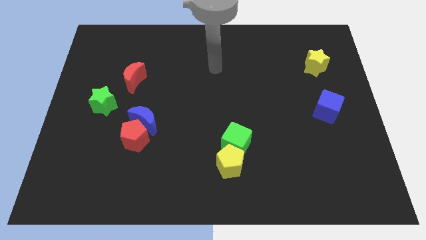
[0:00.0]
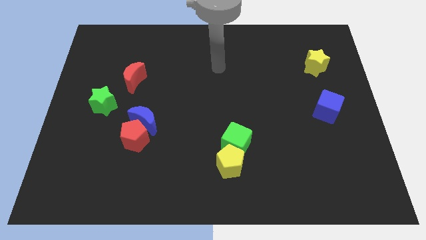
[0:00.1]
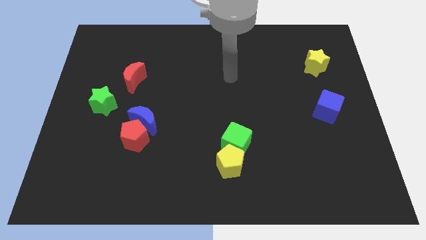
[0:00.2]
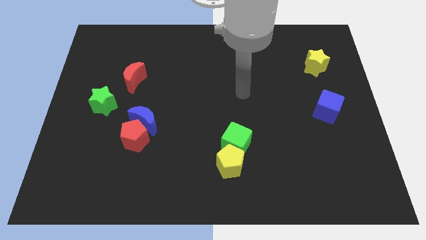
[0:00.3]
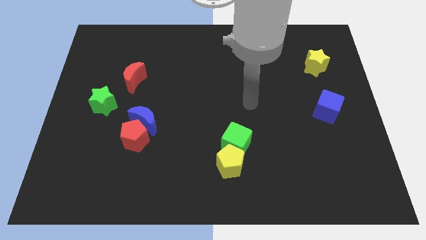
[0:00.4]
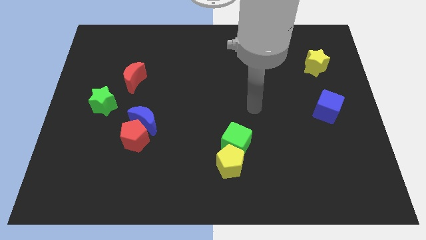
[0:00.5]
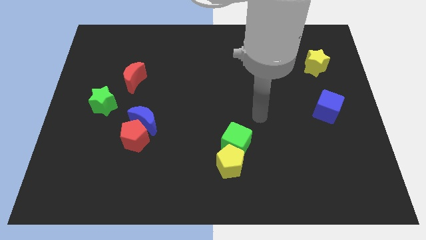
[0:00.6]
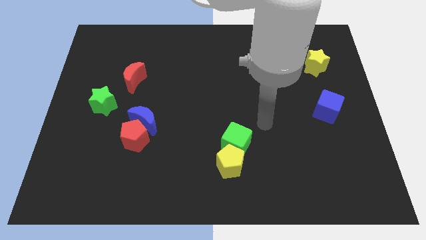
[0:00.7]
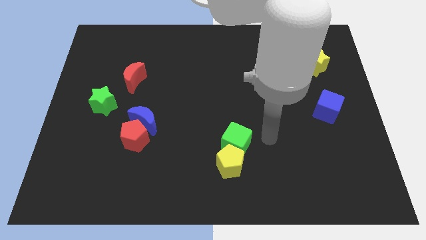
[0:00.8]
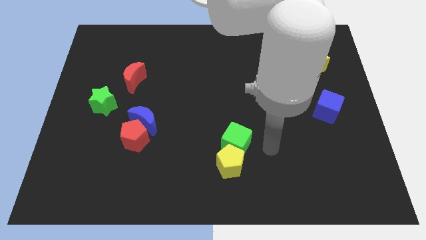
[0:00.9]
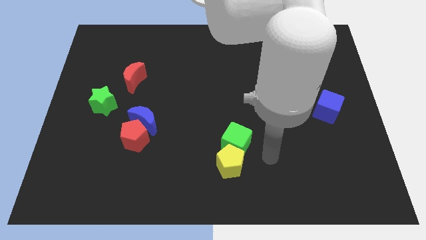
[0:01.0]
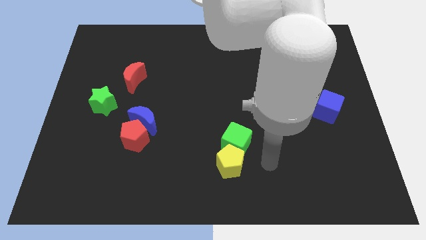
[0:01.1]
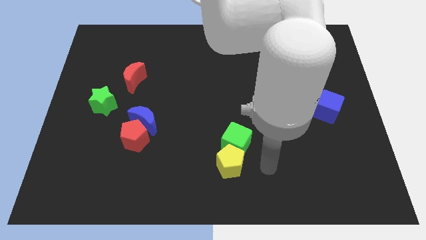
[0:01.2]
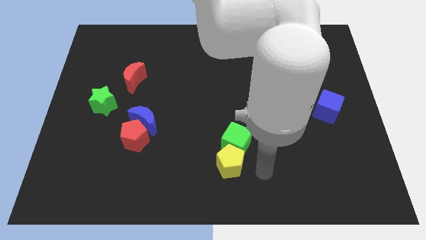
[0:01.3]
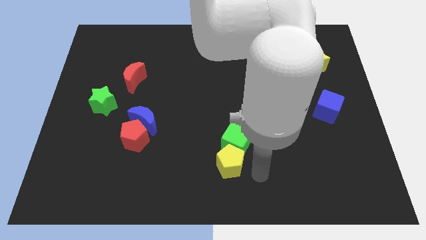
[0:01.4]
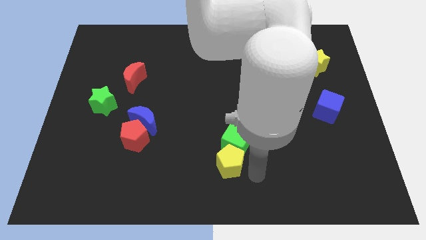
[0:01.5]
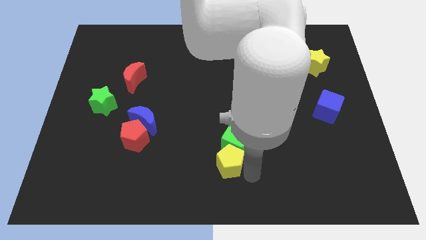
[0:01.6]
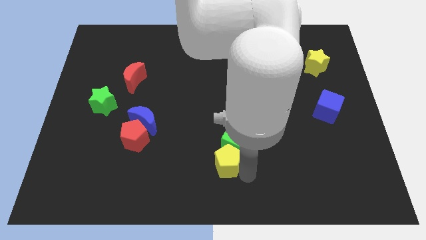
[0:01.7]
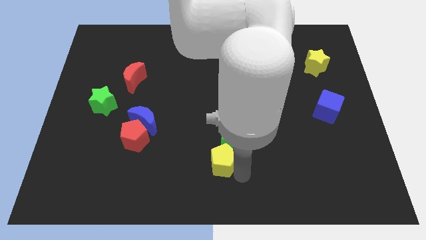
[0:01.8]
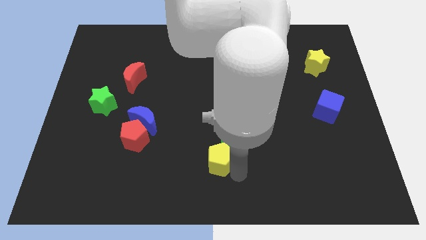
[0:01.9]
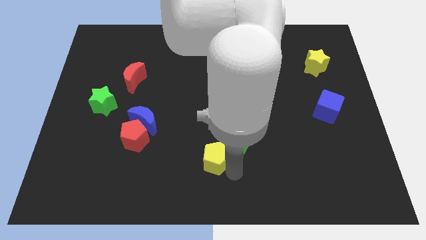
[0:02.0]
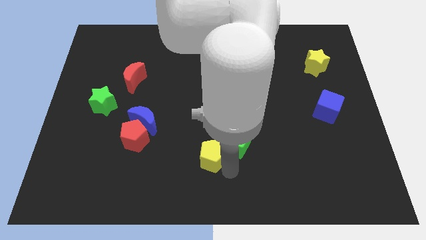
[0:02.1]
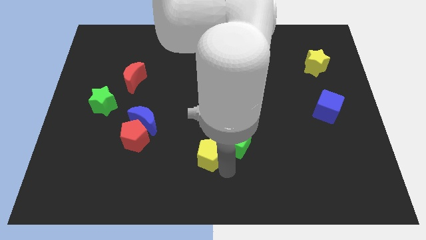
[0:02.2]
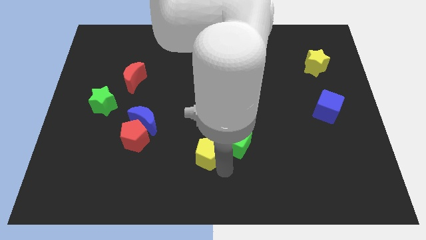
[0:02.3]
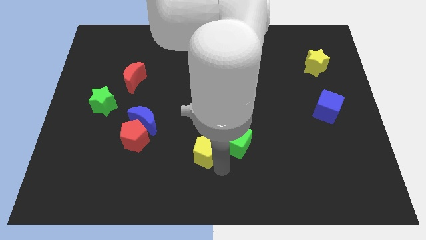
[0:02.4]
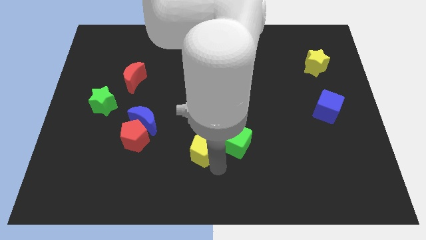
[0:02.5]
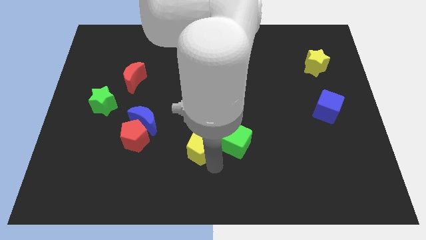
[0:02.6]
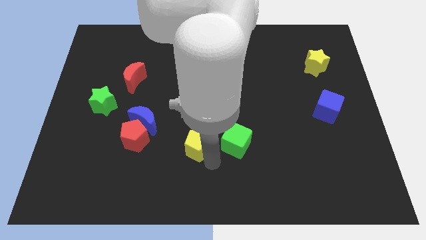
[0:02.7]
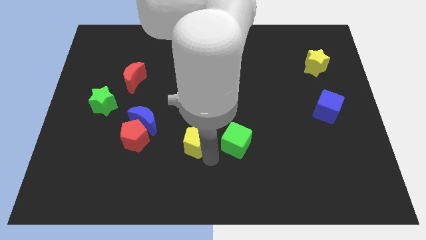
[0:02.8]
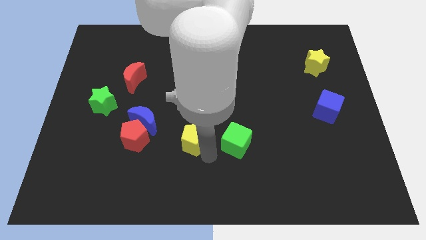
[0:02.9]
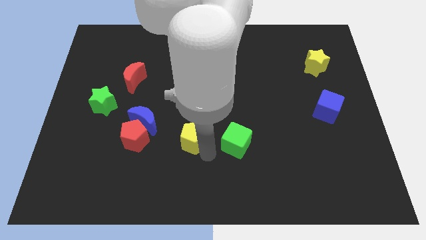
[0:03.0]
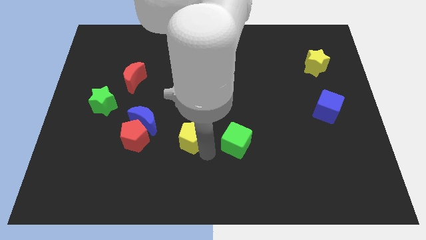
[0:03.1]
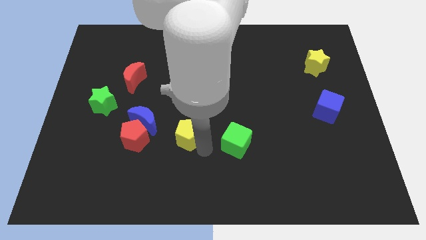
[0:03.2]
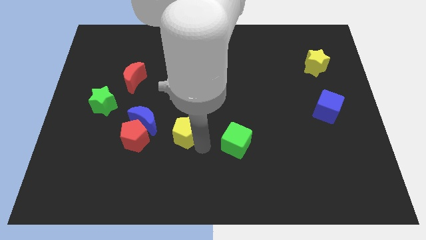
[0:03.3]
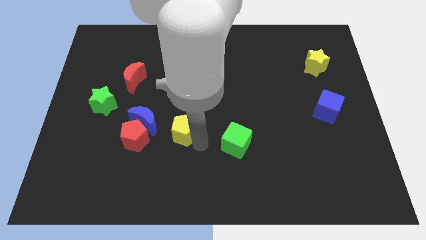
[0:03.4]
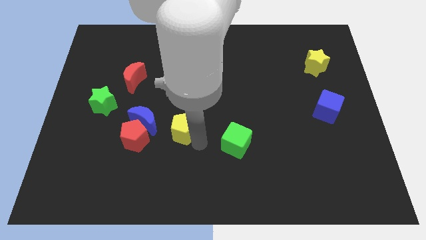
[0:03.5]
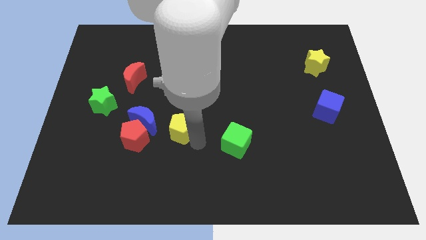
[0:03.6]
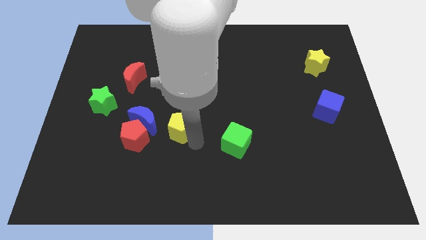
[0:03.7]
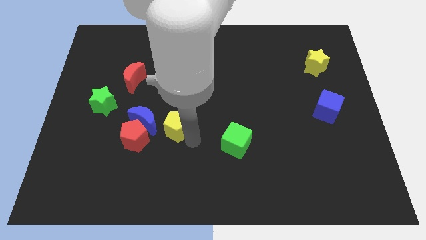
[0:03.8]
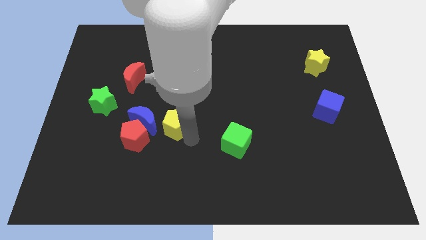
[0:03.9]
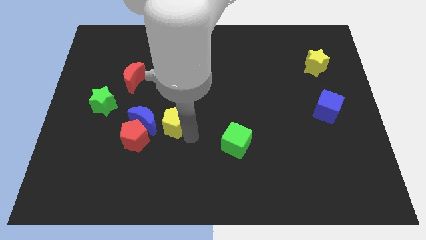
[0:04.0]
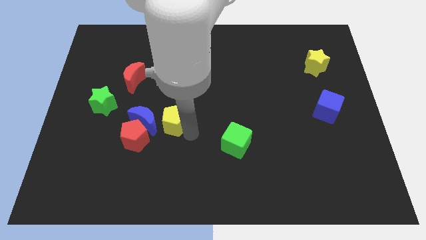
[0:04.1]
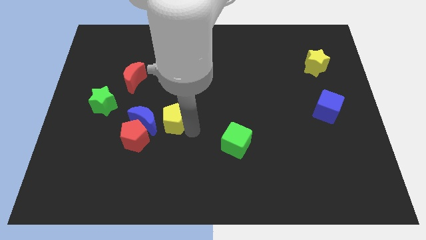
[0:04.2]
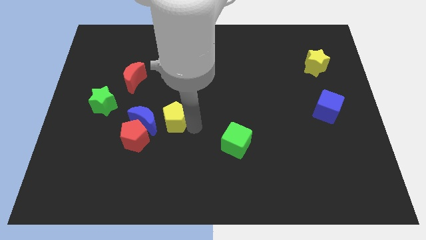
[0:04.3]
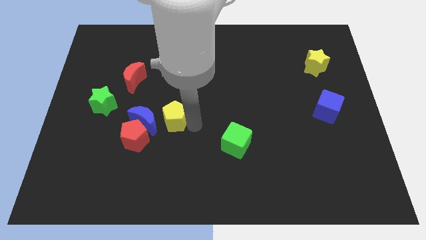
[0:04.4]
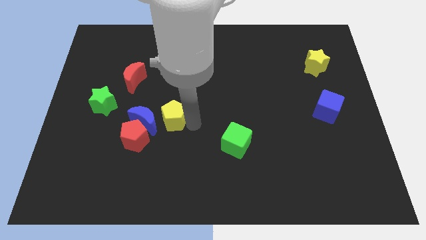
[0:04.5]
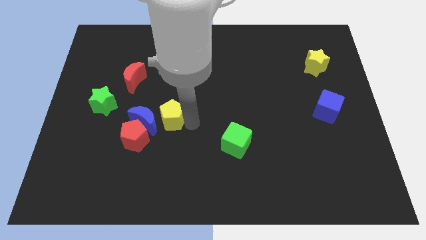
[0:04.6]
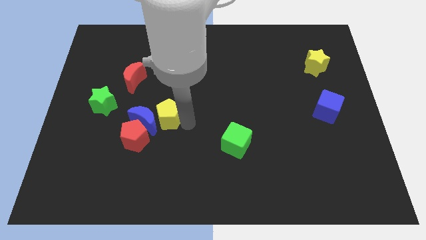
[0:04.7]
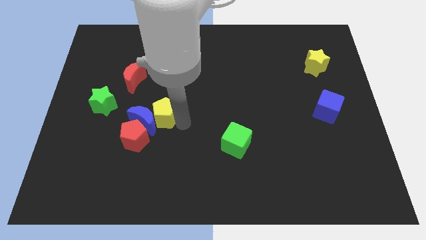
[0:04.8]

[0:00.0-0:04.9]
move the yellow pentagon towards the blue moon

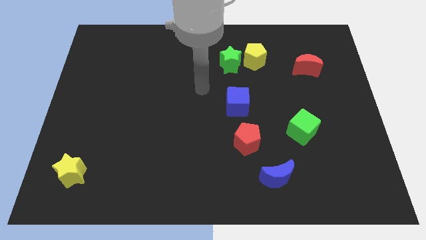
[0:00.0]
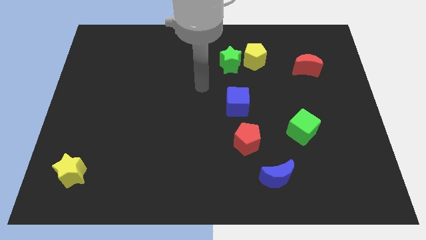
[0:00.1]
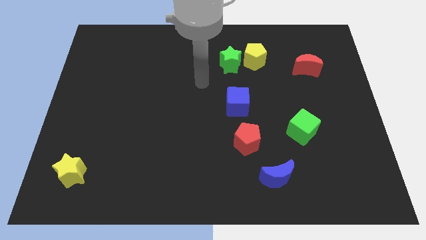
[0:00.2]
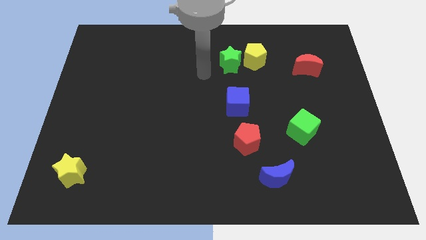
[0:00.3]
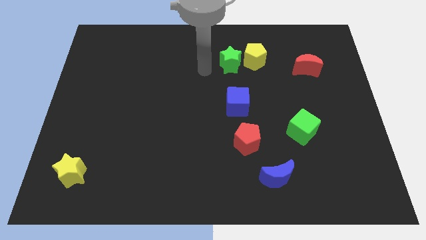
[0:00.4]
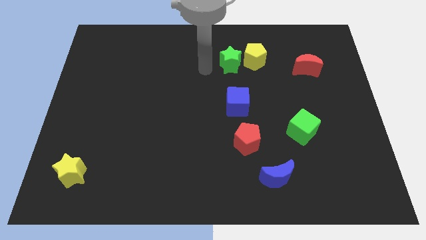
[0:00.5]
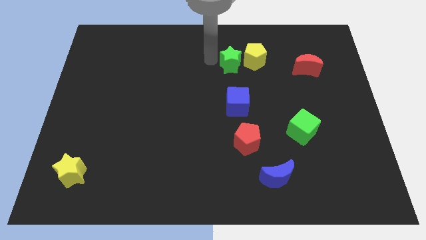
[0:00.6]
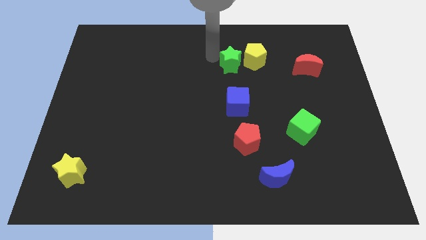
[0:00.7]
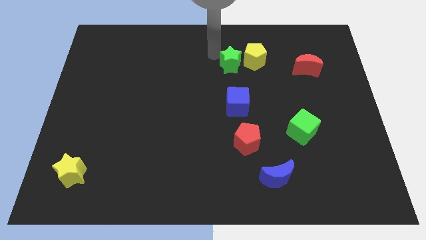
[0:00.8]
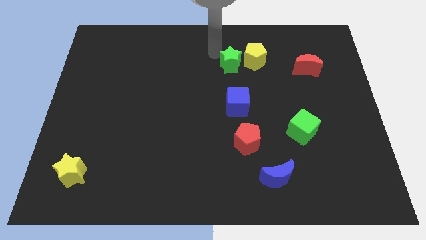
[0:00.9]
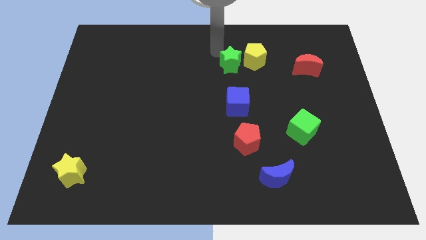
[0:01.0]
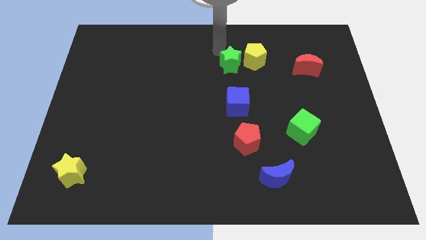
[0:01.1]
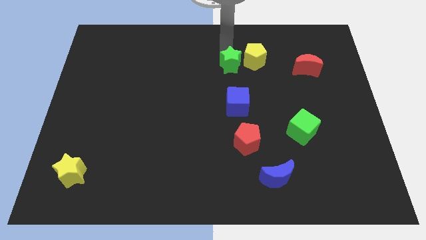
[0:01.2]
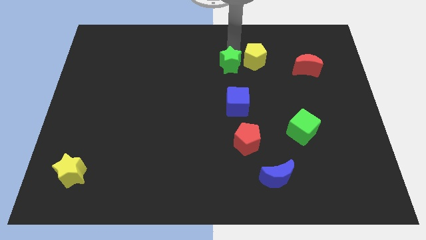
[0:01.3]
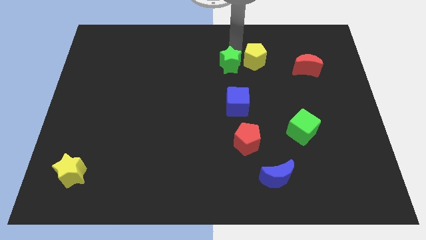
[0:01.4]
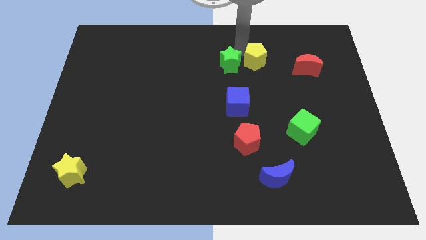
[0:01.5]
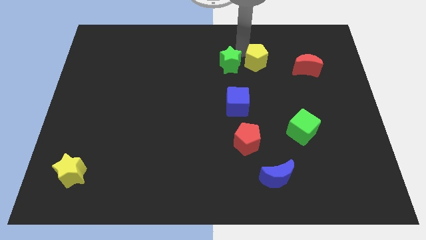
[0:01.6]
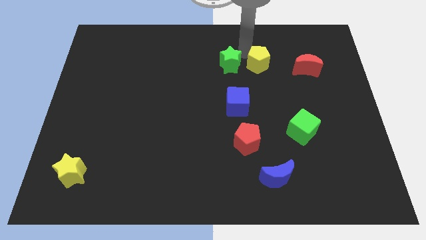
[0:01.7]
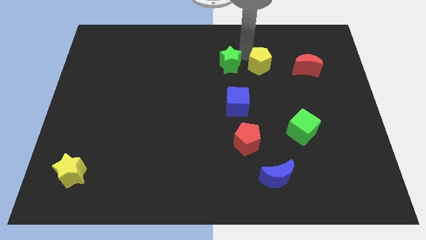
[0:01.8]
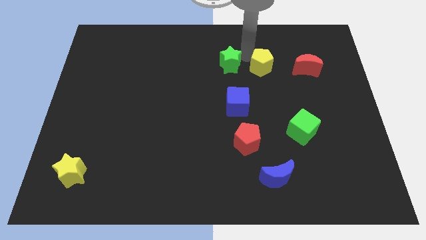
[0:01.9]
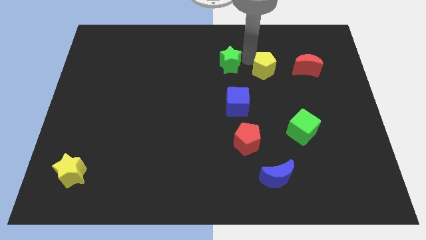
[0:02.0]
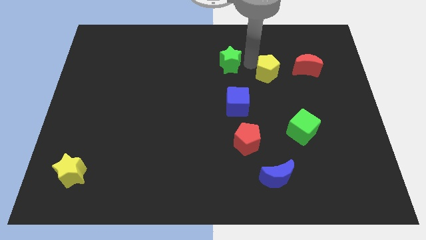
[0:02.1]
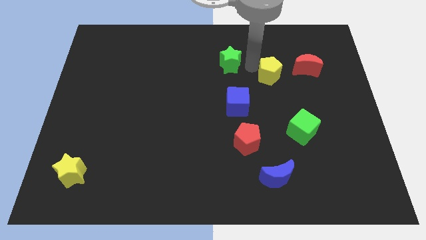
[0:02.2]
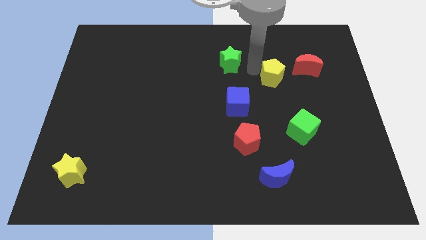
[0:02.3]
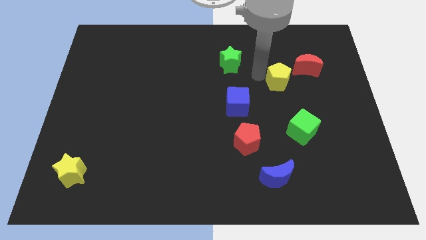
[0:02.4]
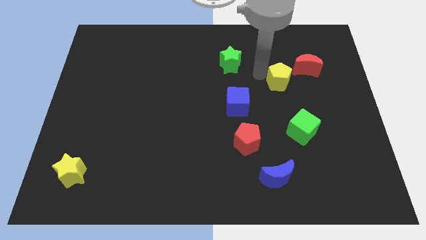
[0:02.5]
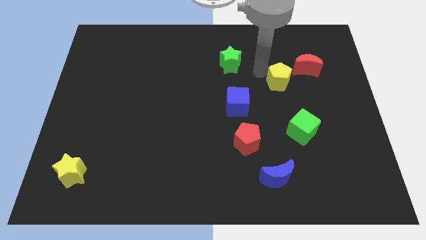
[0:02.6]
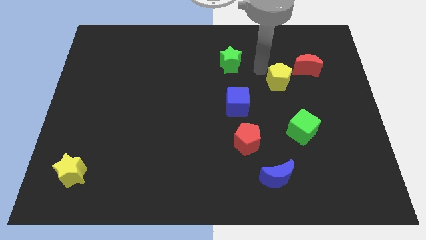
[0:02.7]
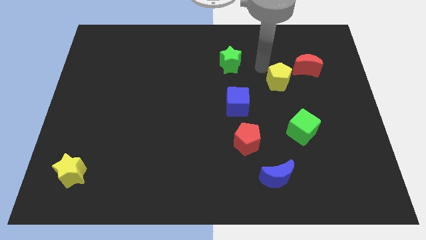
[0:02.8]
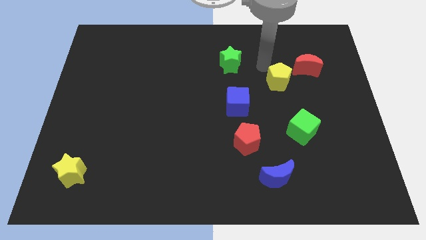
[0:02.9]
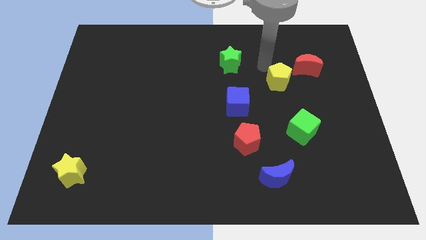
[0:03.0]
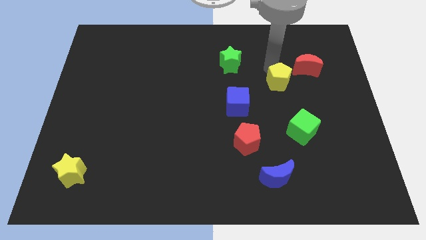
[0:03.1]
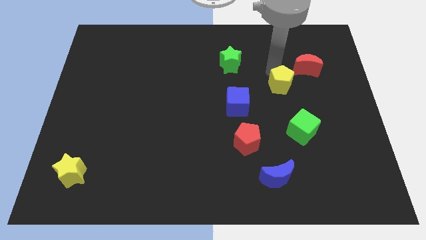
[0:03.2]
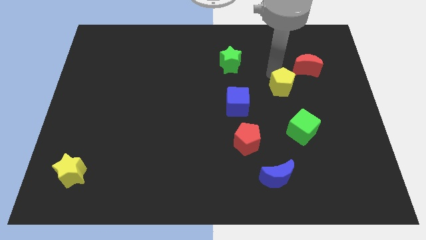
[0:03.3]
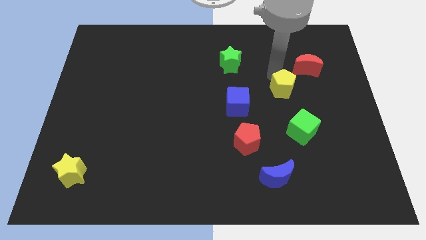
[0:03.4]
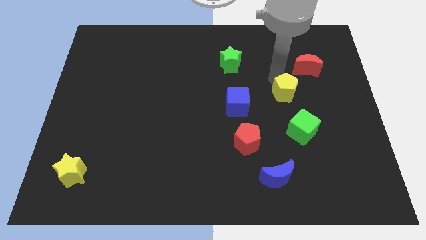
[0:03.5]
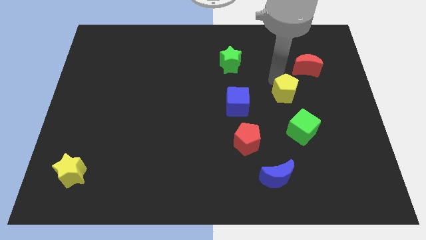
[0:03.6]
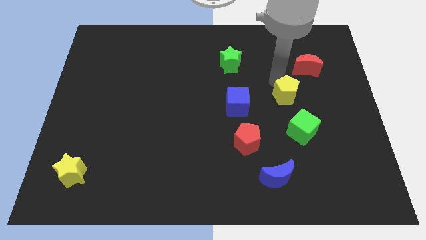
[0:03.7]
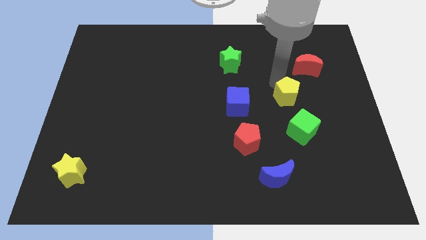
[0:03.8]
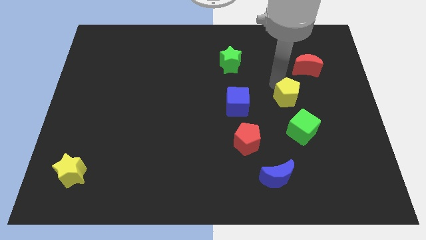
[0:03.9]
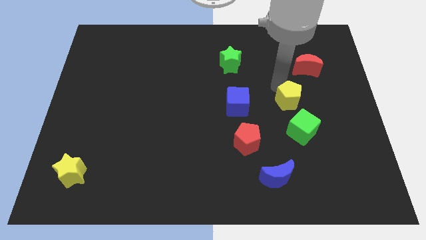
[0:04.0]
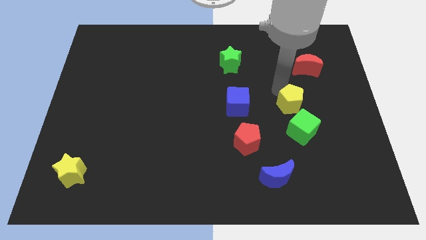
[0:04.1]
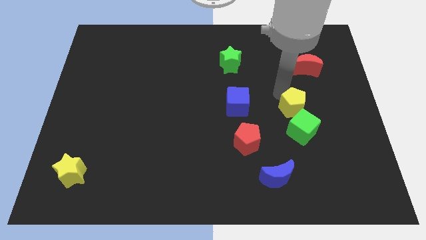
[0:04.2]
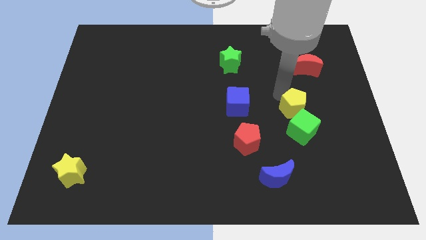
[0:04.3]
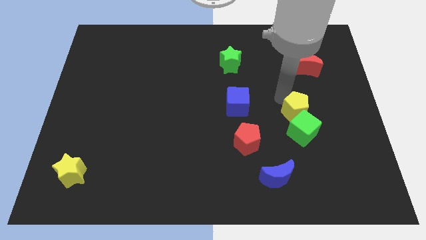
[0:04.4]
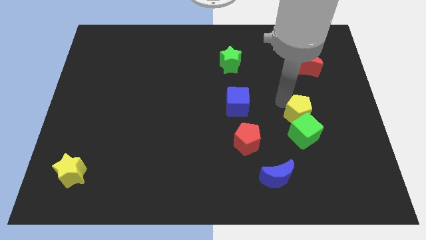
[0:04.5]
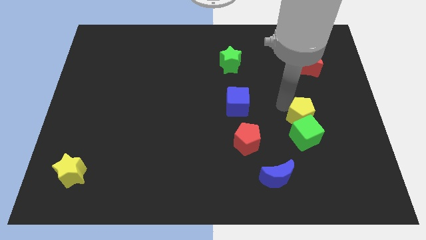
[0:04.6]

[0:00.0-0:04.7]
slide the yellow pentagon next to the green cube
